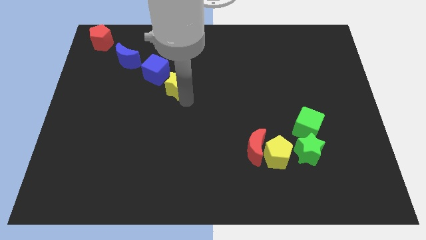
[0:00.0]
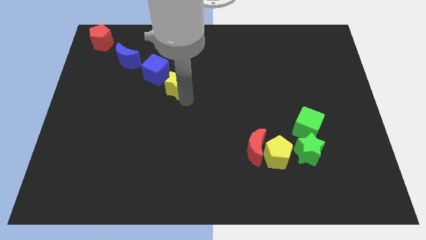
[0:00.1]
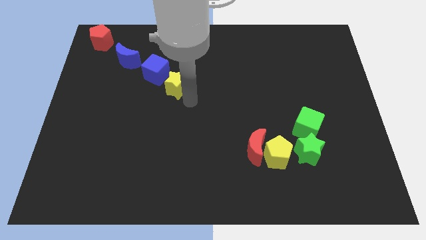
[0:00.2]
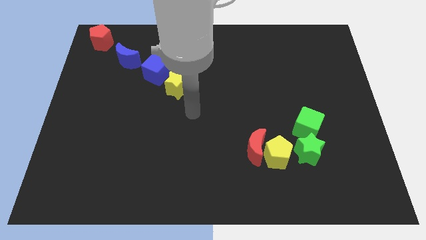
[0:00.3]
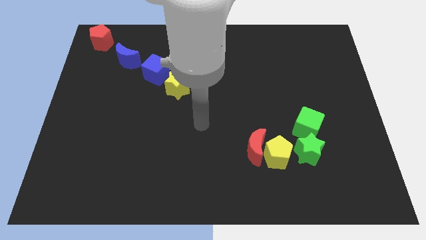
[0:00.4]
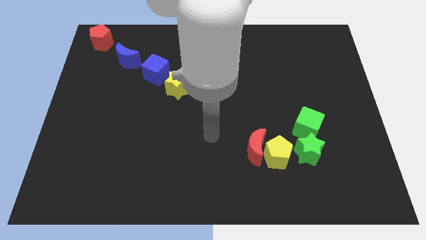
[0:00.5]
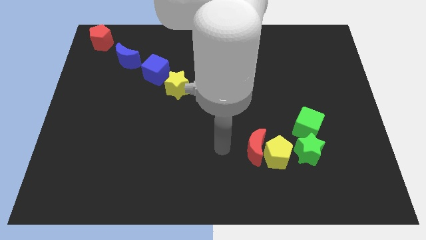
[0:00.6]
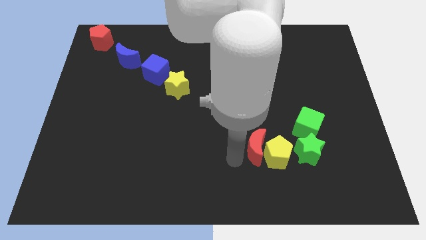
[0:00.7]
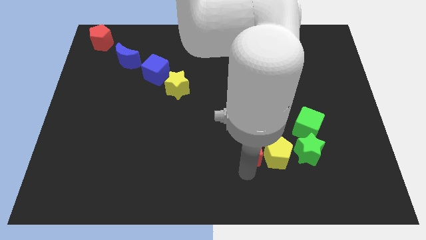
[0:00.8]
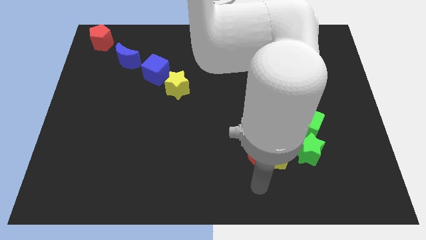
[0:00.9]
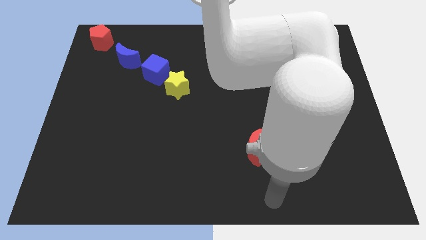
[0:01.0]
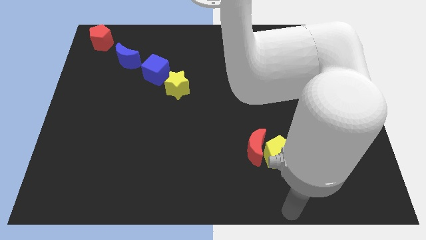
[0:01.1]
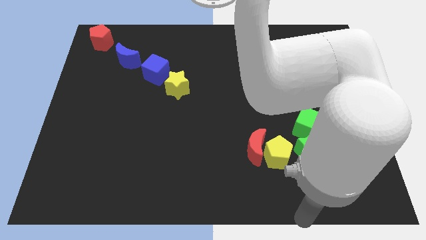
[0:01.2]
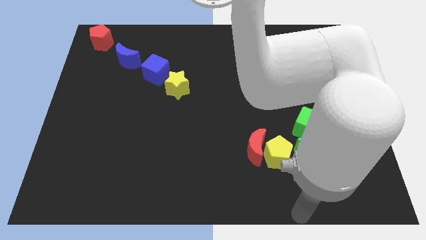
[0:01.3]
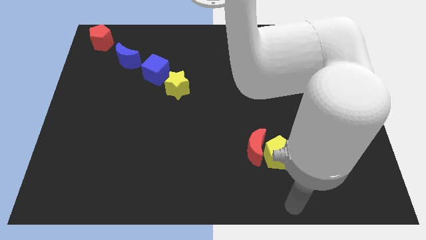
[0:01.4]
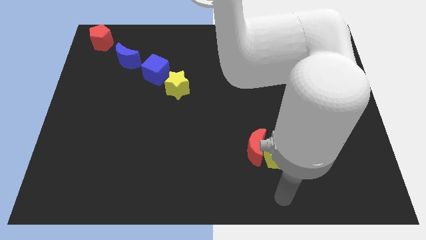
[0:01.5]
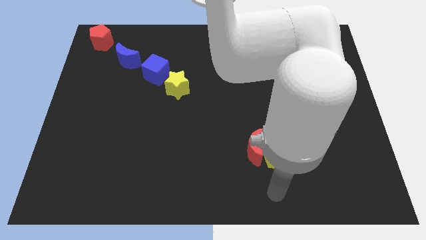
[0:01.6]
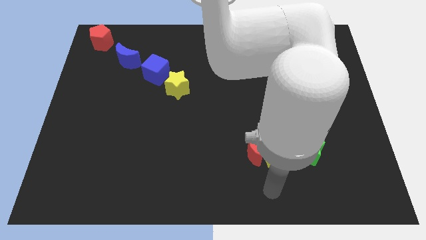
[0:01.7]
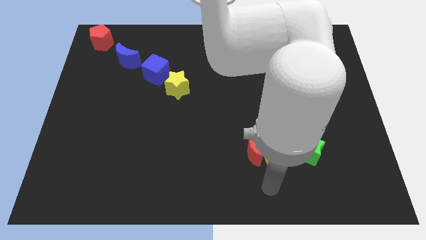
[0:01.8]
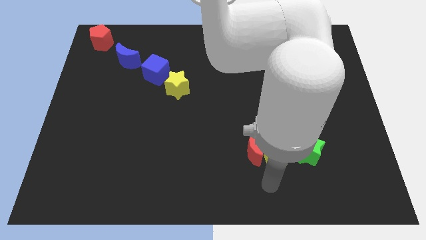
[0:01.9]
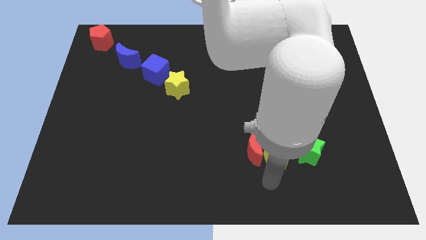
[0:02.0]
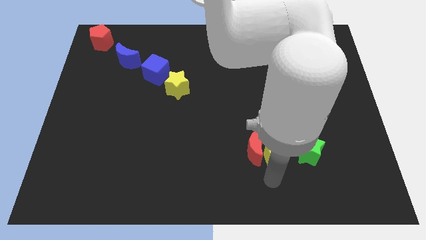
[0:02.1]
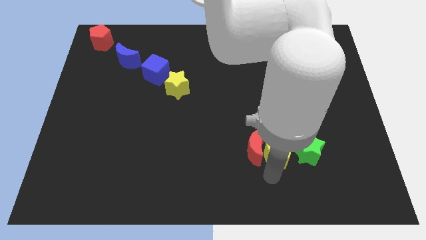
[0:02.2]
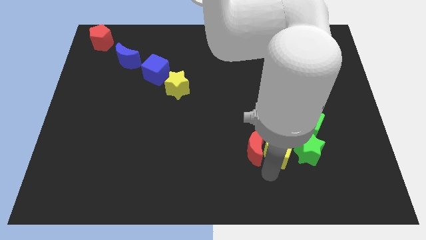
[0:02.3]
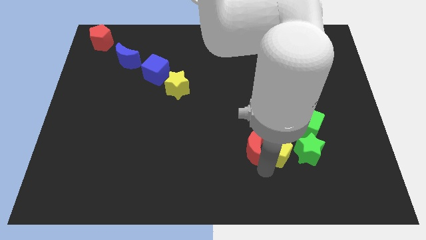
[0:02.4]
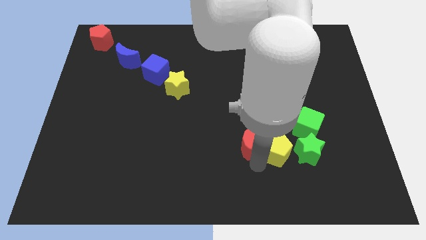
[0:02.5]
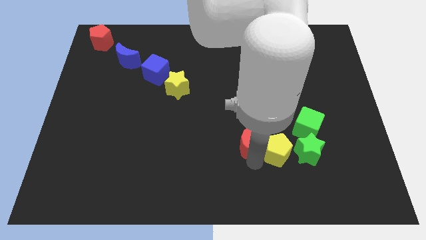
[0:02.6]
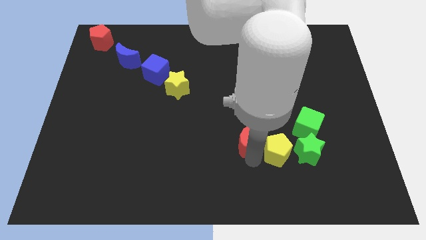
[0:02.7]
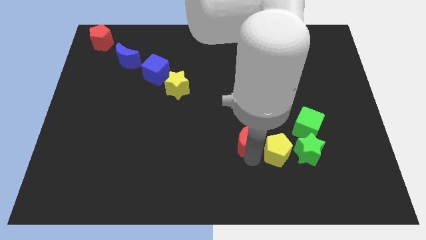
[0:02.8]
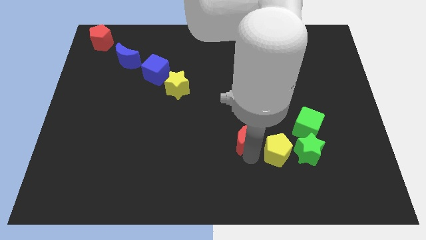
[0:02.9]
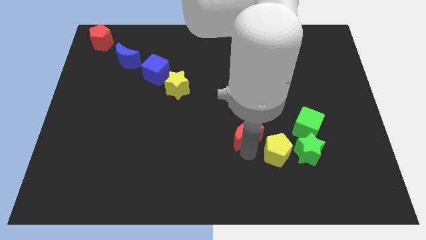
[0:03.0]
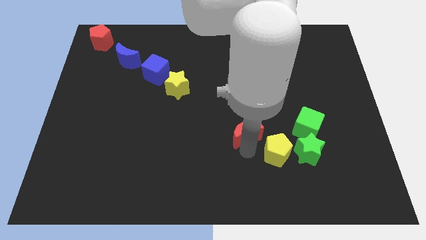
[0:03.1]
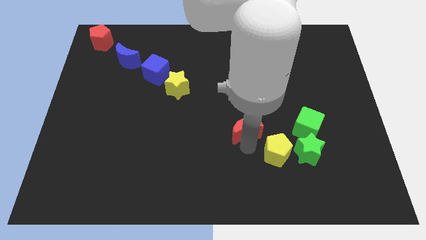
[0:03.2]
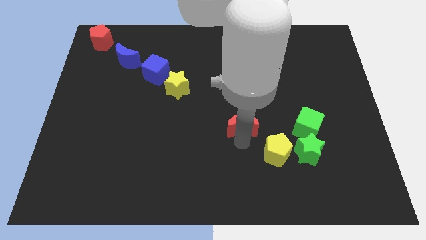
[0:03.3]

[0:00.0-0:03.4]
slightly push the red moon to the top side

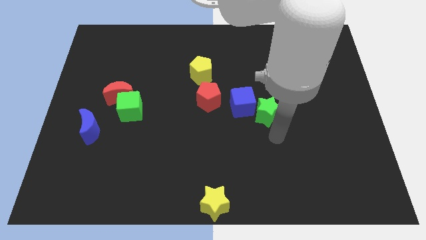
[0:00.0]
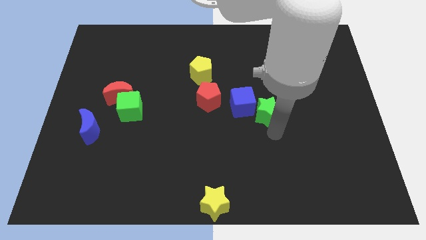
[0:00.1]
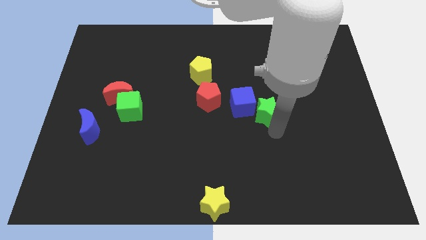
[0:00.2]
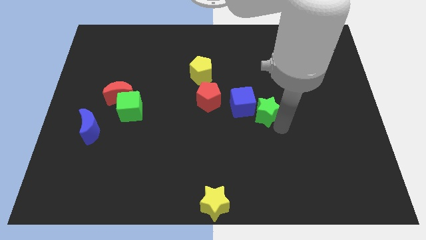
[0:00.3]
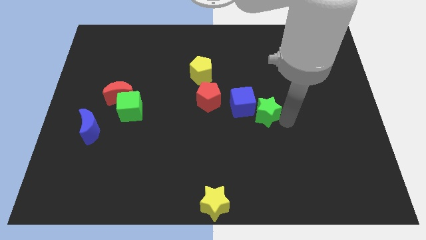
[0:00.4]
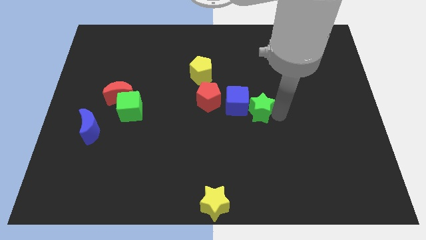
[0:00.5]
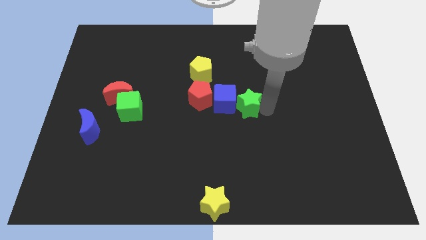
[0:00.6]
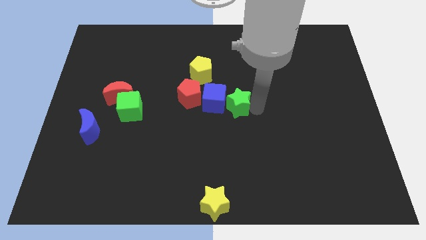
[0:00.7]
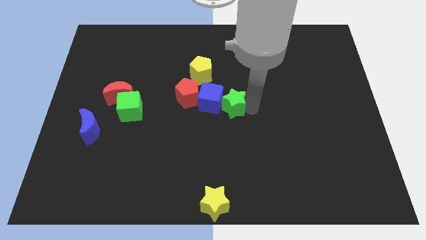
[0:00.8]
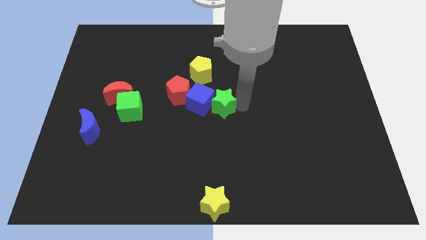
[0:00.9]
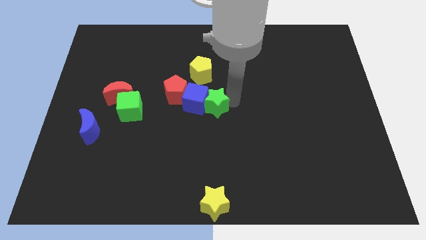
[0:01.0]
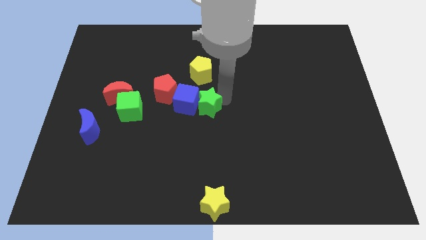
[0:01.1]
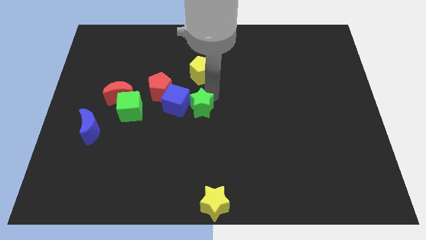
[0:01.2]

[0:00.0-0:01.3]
slide blue cube with green star into the red pentagon

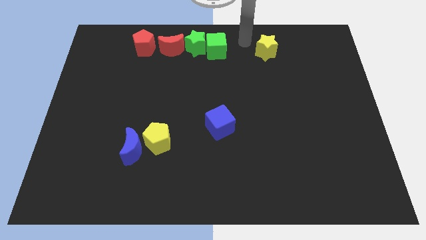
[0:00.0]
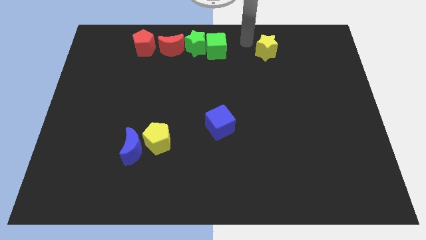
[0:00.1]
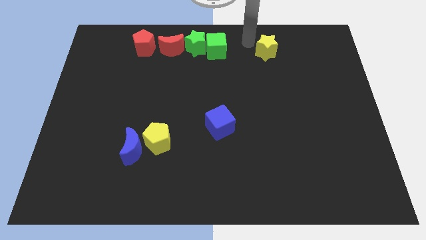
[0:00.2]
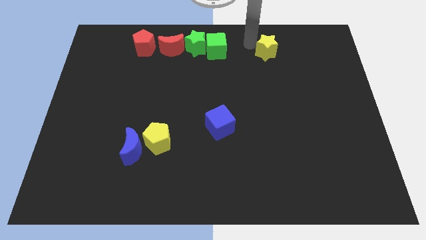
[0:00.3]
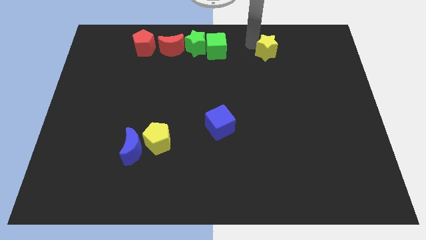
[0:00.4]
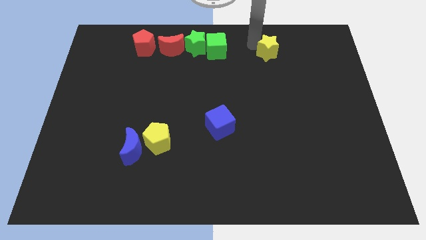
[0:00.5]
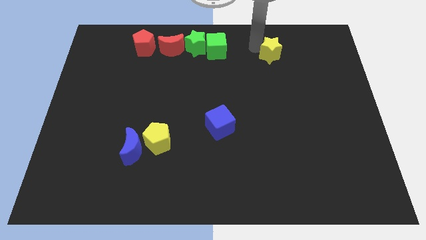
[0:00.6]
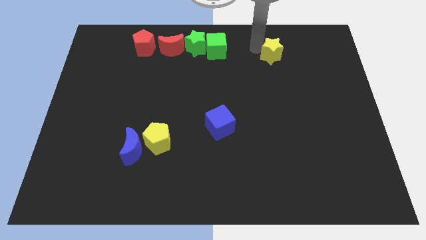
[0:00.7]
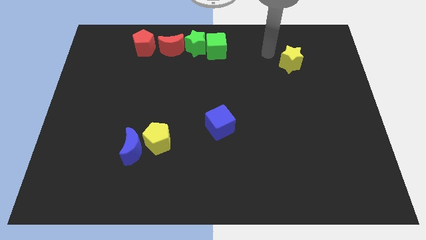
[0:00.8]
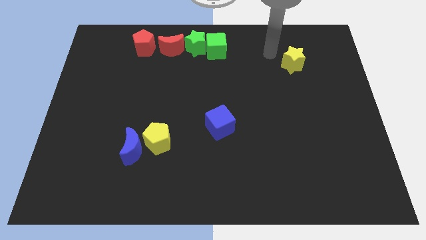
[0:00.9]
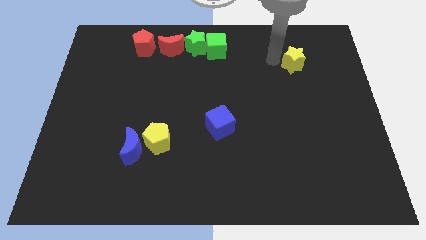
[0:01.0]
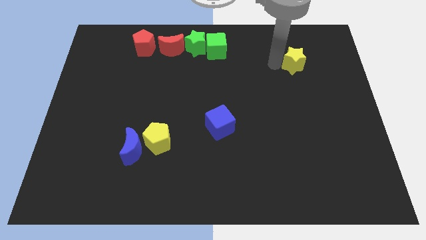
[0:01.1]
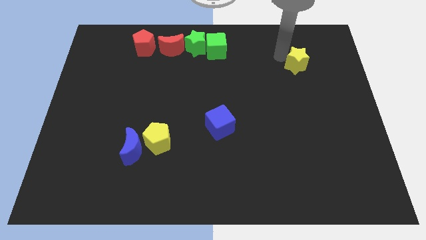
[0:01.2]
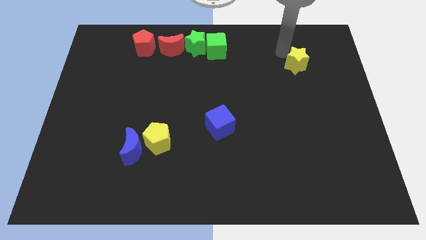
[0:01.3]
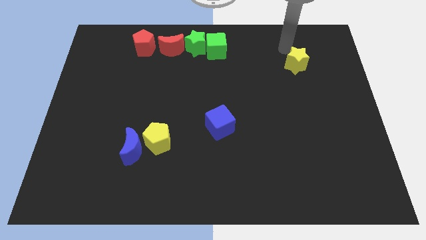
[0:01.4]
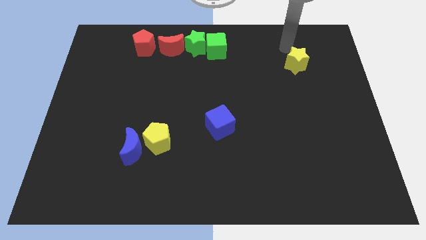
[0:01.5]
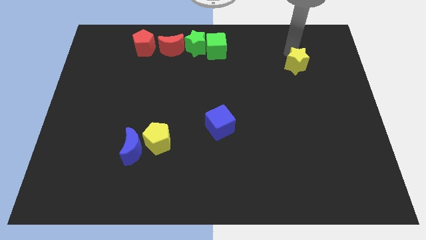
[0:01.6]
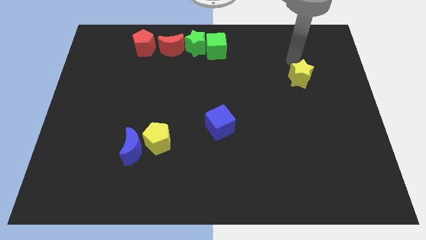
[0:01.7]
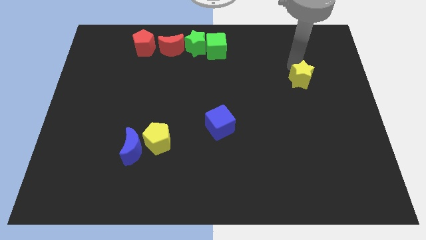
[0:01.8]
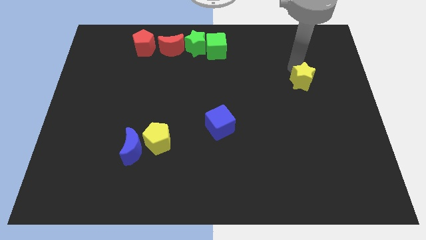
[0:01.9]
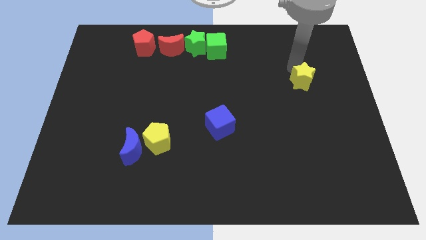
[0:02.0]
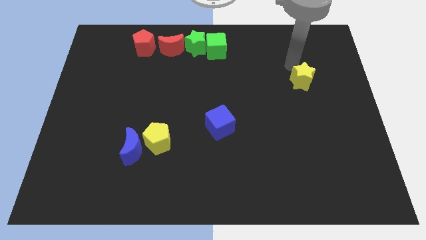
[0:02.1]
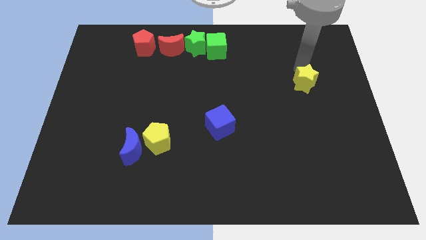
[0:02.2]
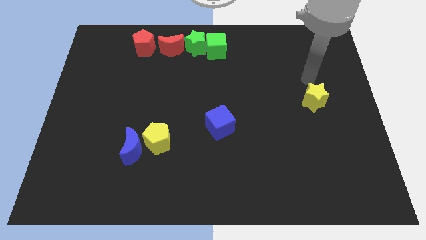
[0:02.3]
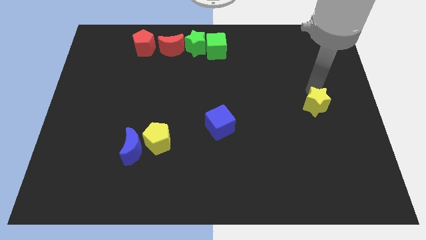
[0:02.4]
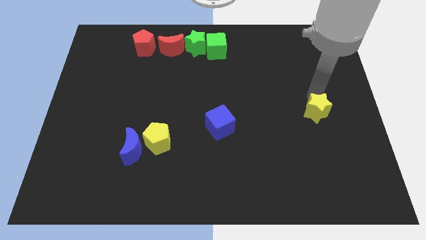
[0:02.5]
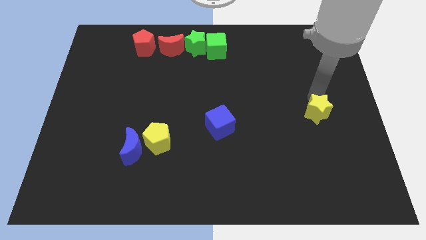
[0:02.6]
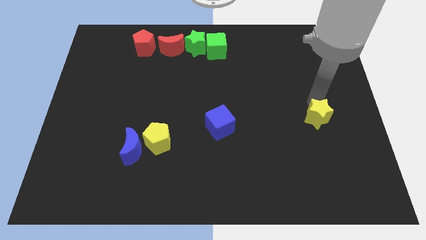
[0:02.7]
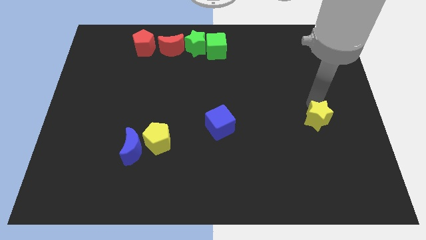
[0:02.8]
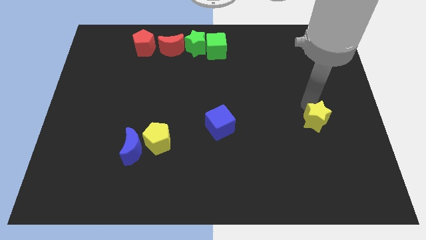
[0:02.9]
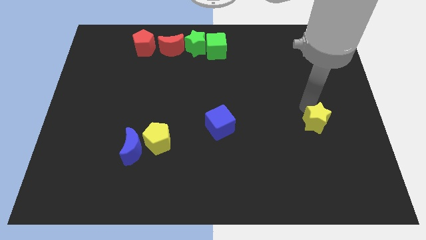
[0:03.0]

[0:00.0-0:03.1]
place the yellow star horizontally to right side of the blue cube

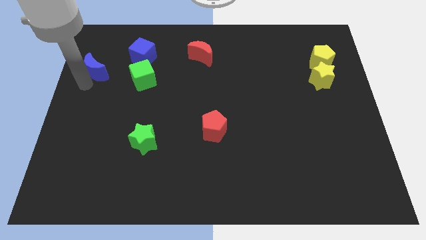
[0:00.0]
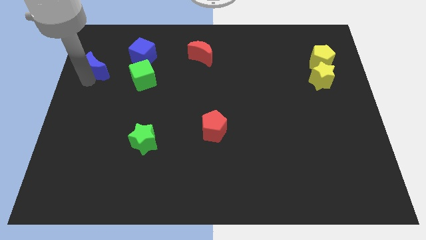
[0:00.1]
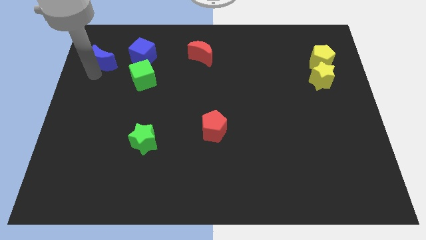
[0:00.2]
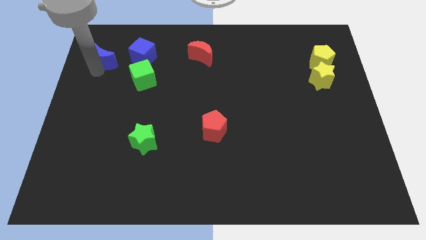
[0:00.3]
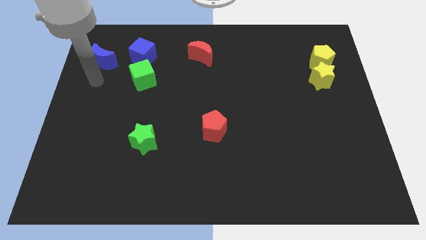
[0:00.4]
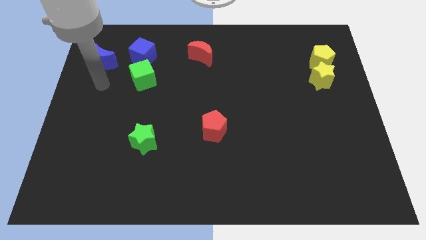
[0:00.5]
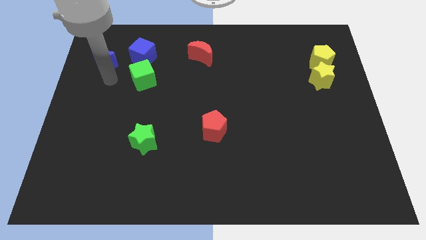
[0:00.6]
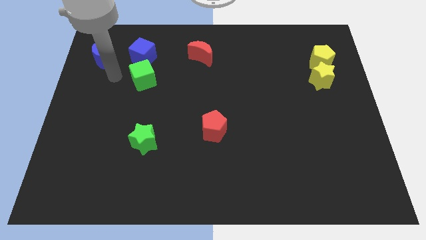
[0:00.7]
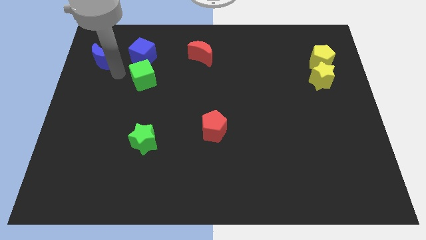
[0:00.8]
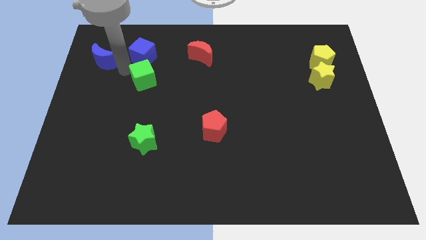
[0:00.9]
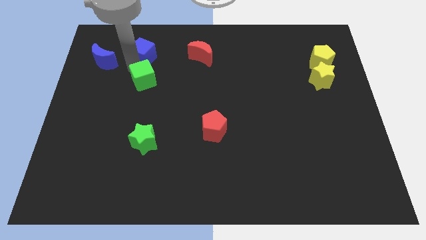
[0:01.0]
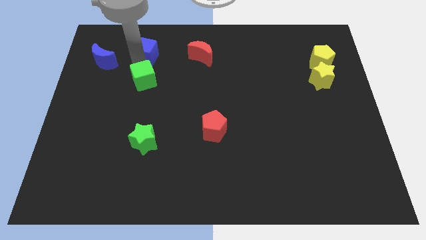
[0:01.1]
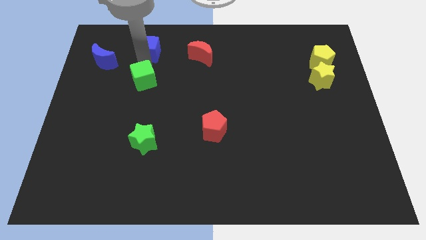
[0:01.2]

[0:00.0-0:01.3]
move the blue crescent slightly to the top left of the board

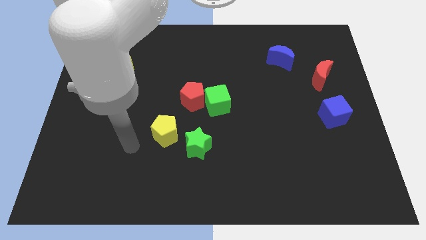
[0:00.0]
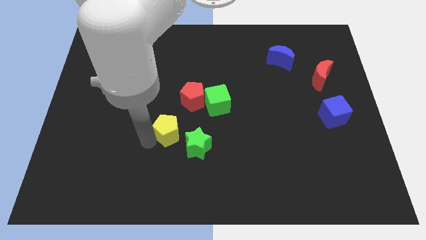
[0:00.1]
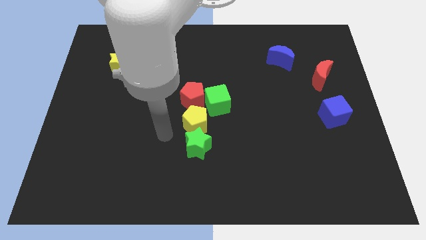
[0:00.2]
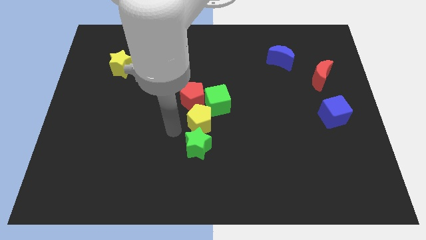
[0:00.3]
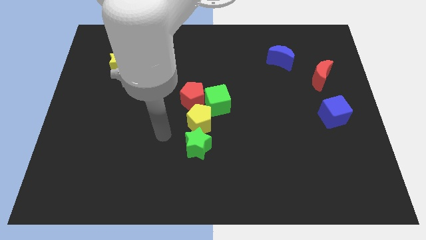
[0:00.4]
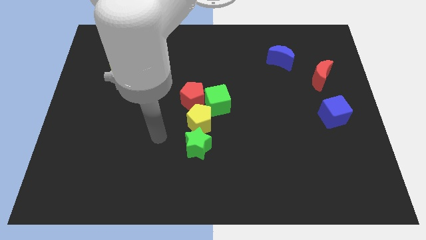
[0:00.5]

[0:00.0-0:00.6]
place the yellow pentagon between the red pentagon and green star
